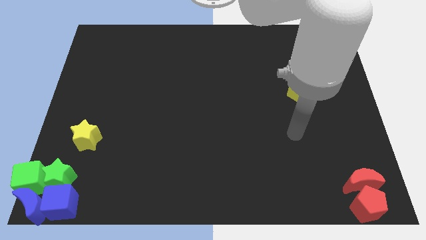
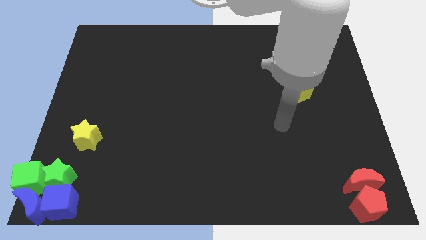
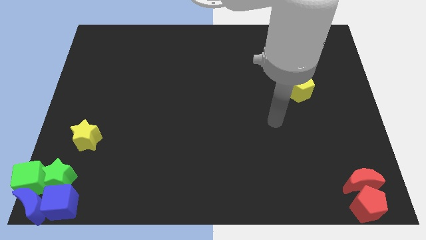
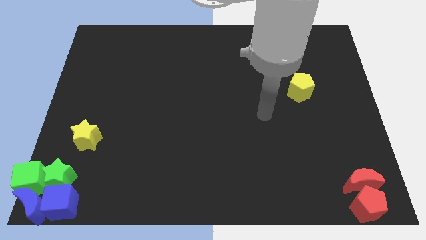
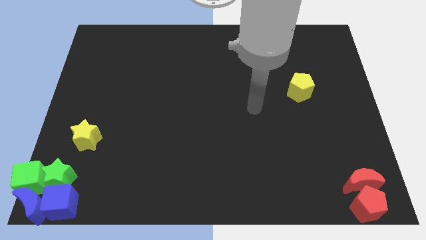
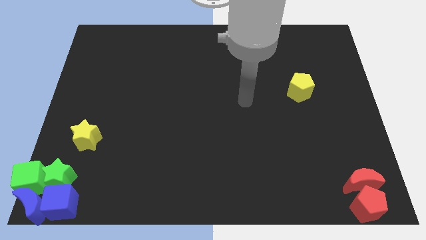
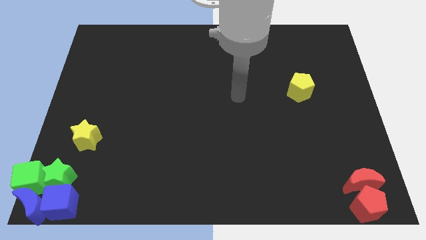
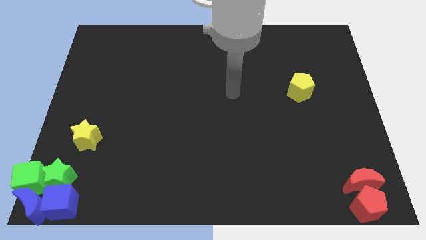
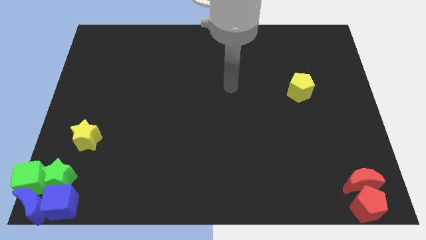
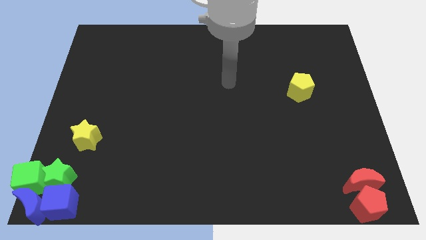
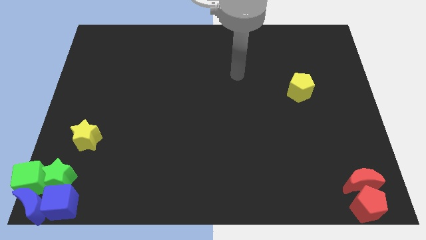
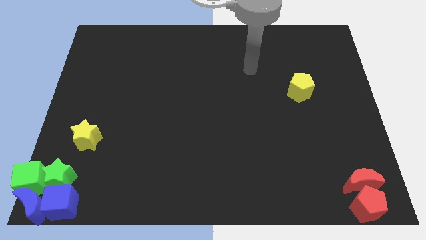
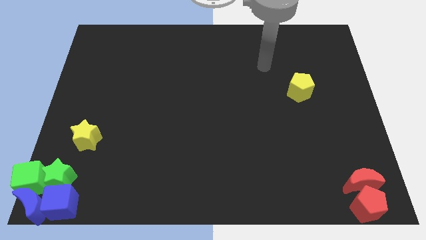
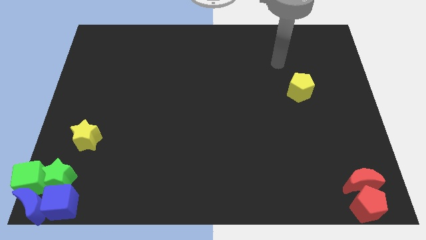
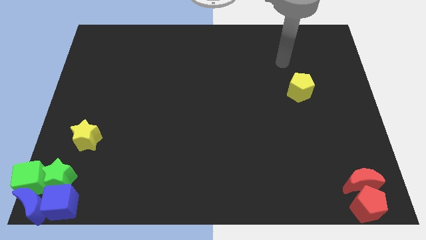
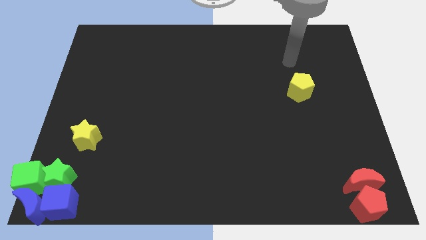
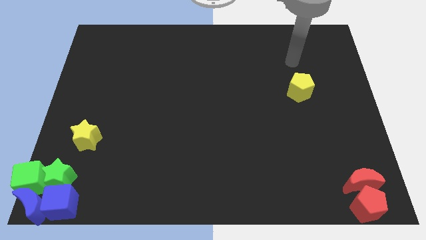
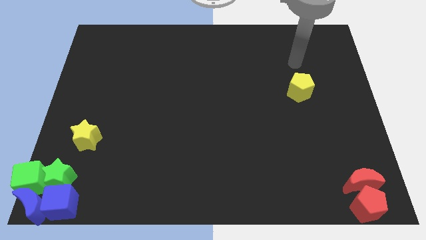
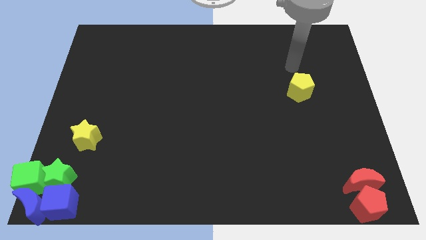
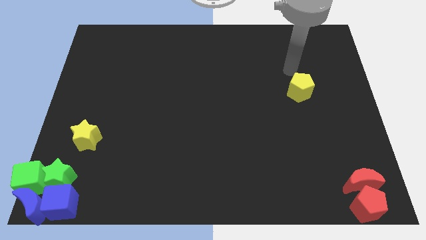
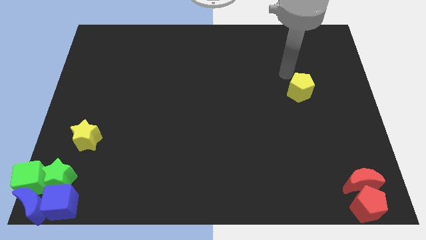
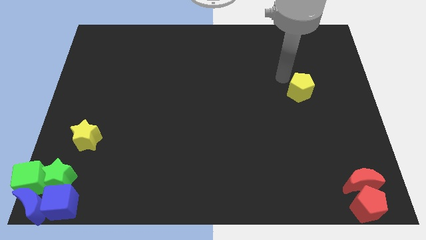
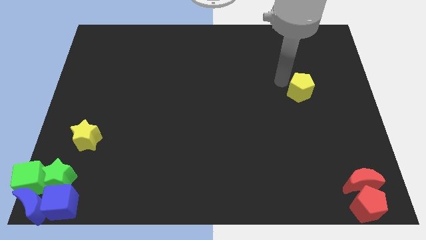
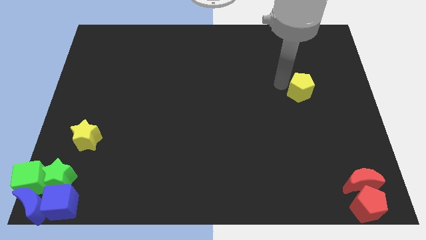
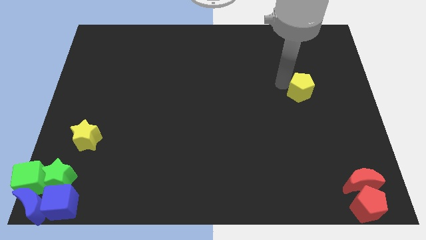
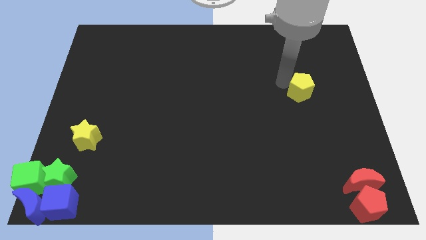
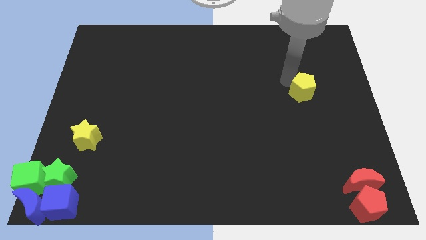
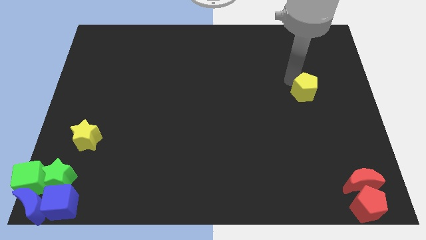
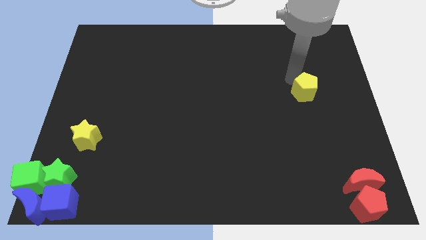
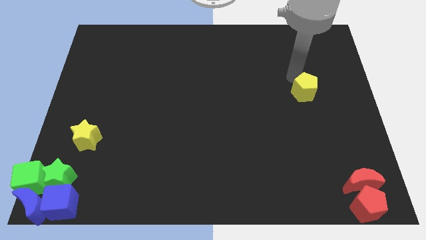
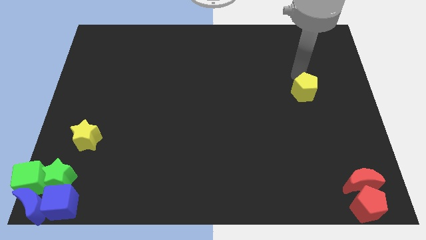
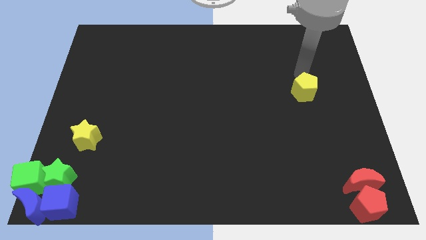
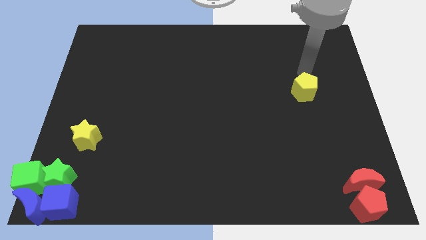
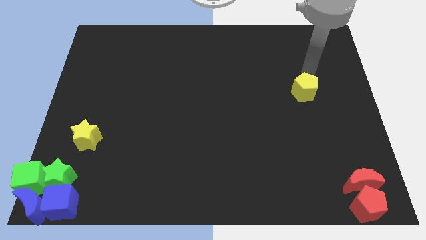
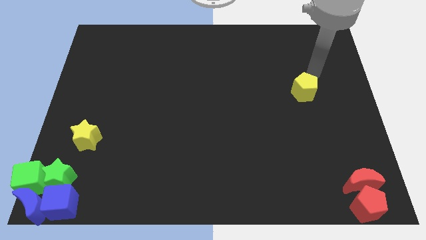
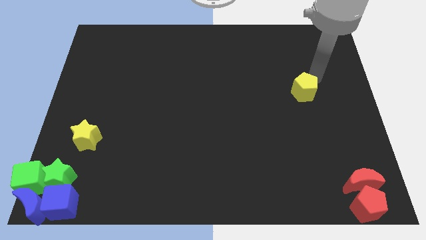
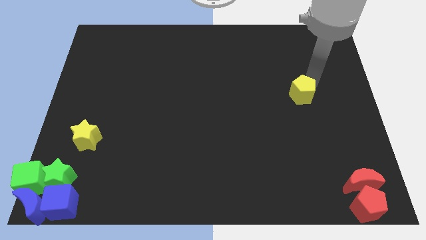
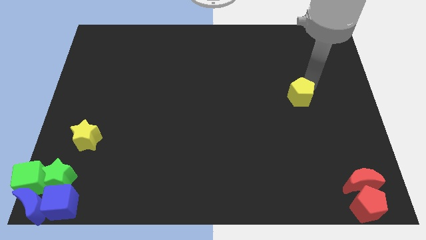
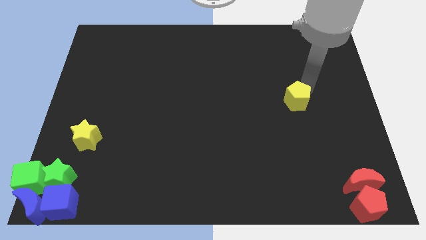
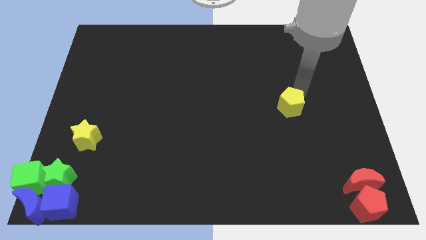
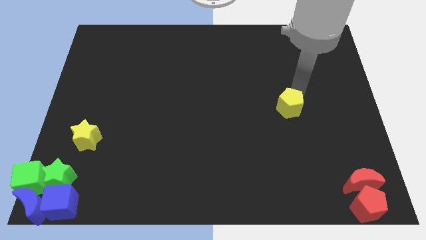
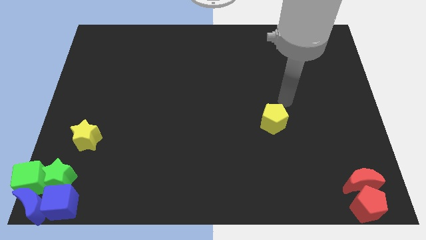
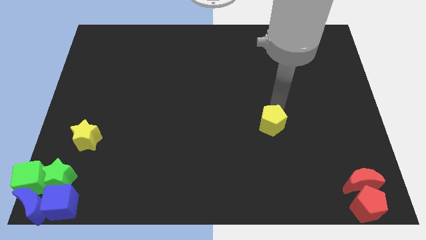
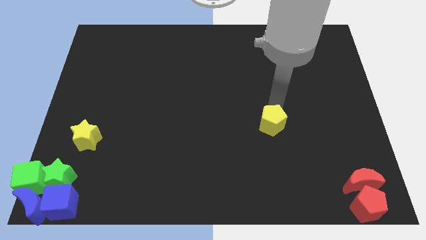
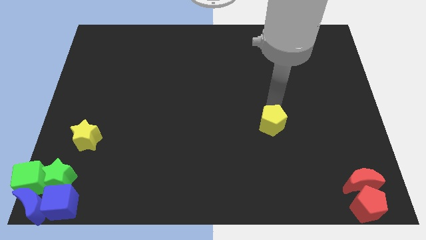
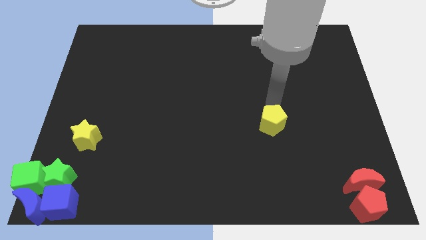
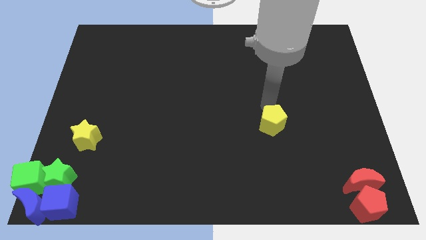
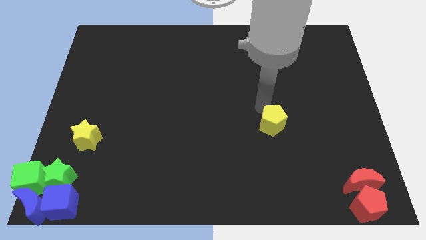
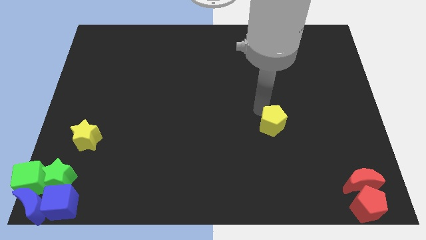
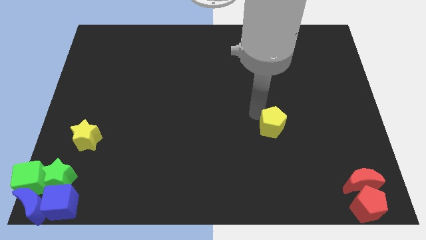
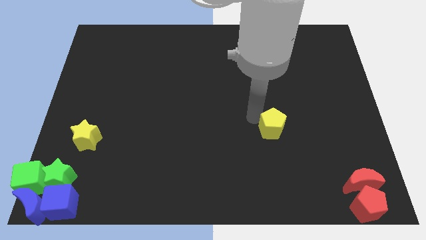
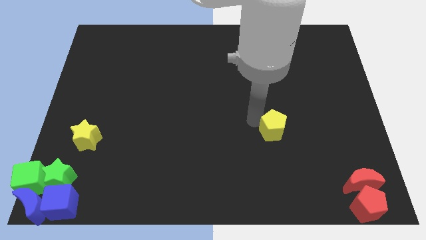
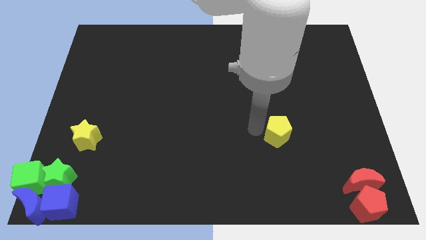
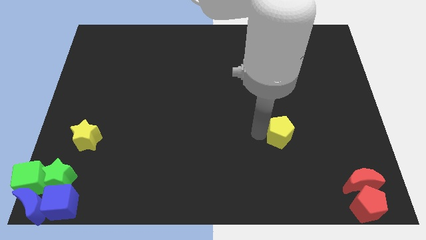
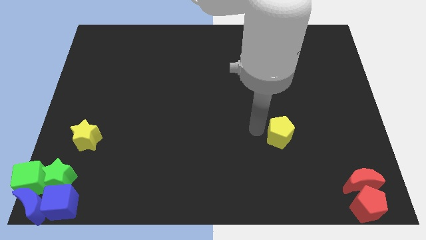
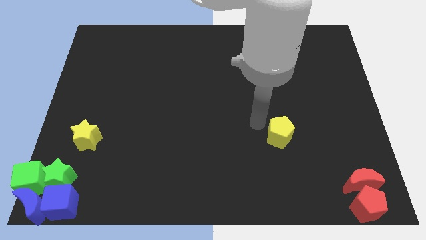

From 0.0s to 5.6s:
push the yellow pentagon to the right of the yellow star

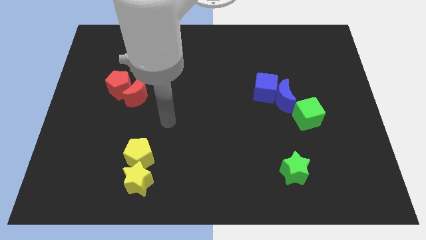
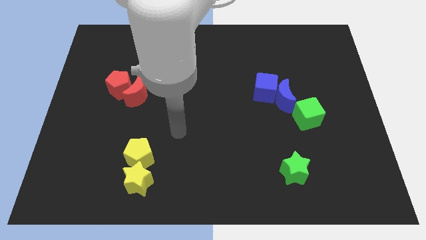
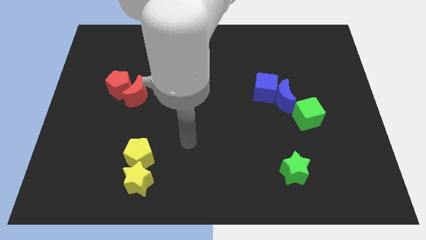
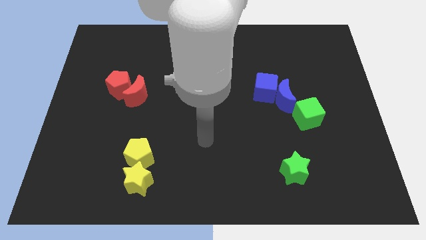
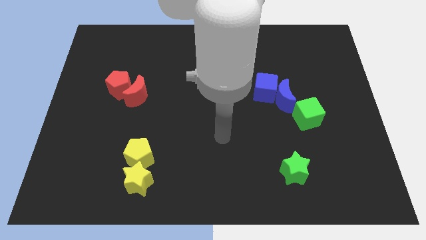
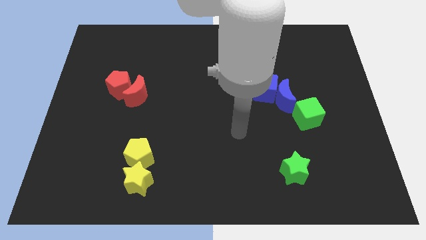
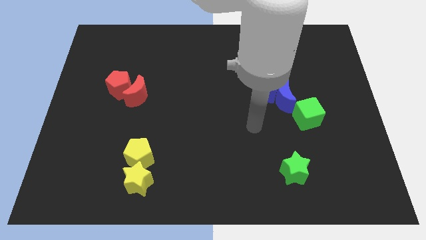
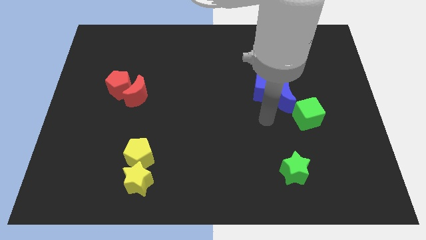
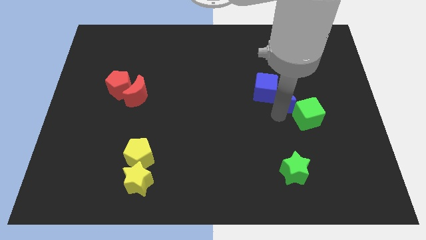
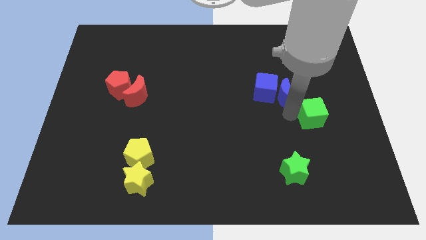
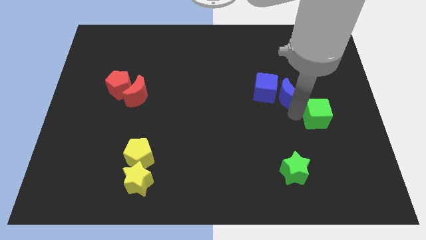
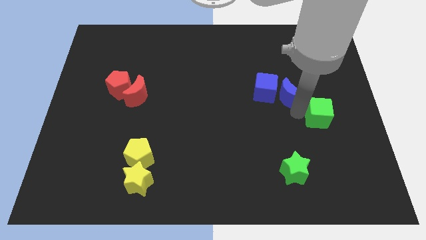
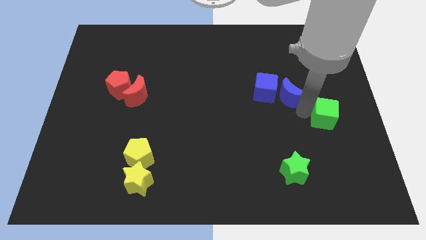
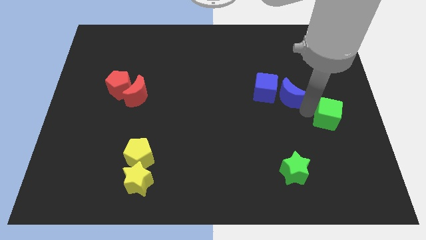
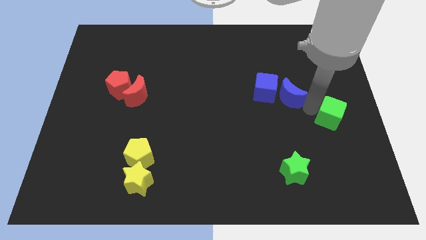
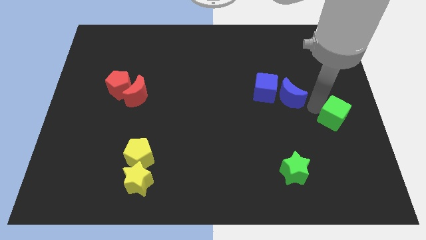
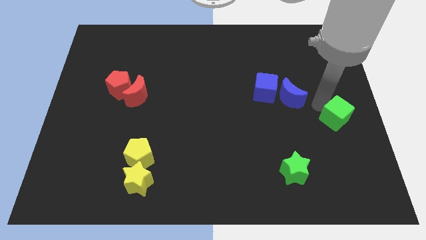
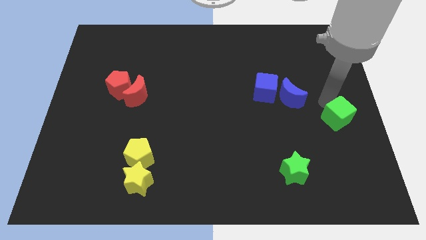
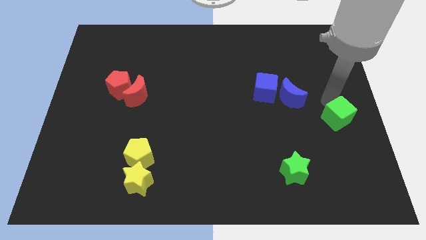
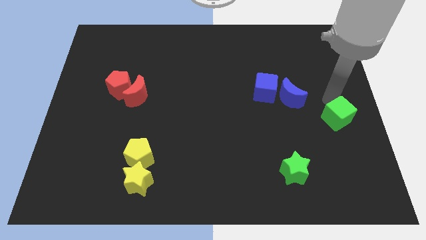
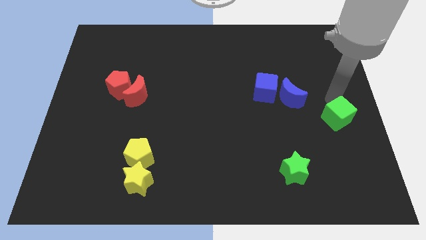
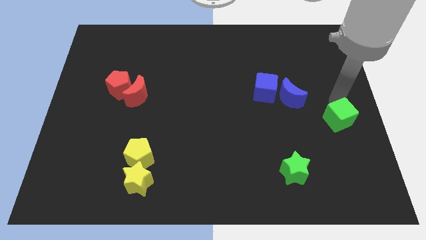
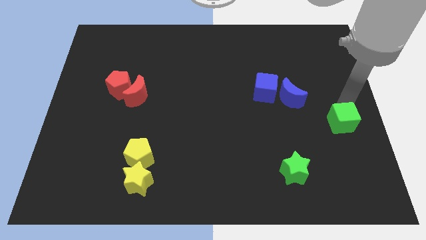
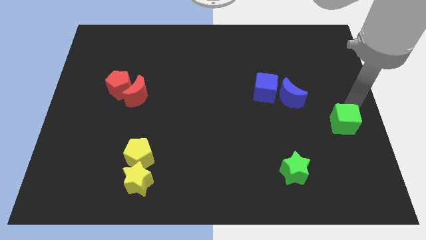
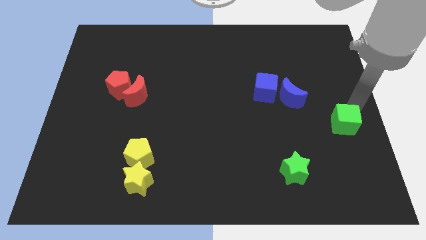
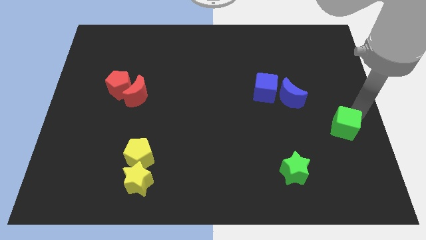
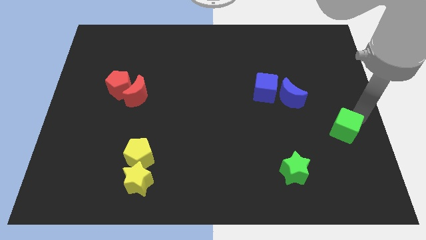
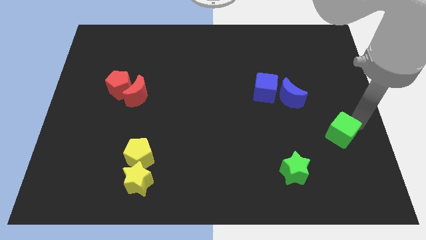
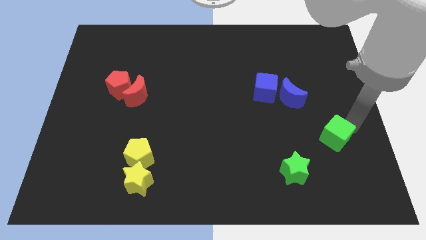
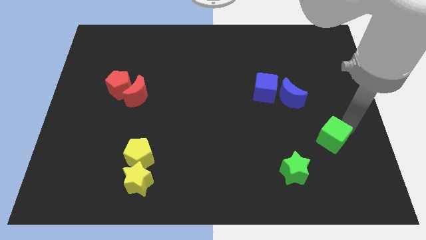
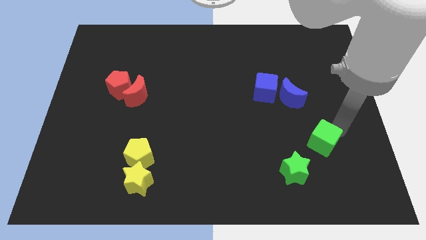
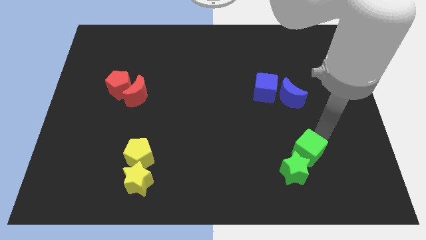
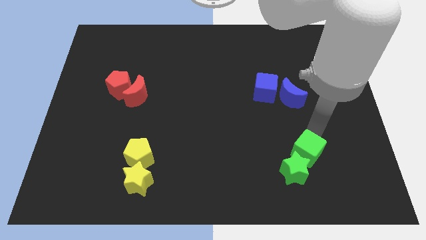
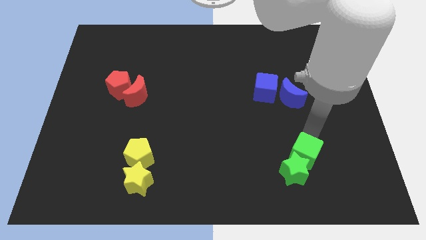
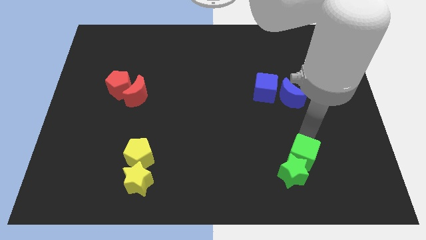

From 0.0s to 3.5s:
push green cube in to green star
